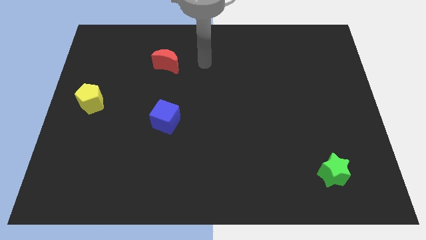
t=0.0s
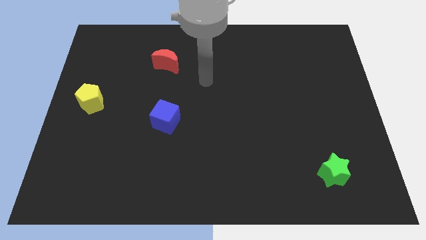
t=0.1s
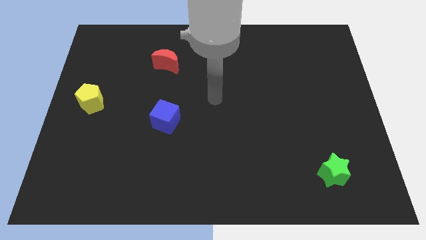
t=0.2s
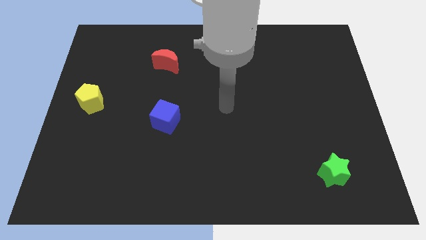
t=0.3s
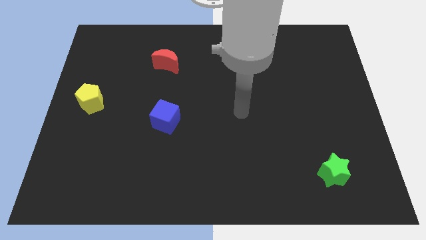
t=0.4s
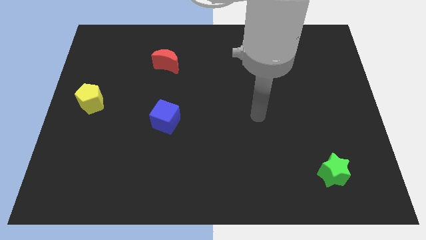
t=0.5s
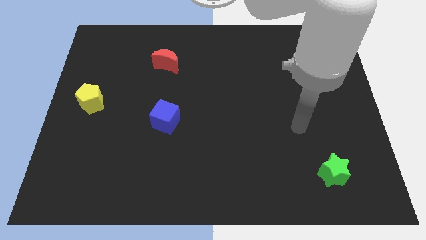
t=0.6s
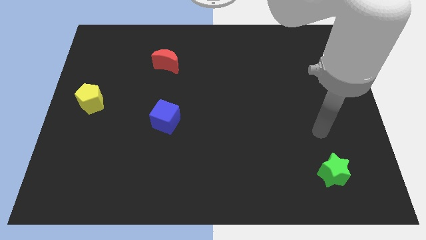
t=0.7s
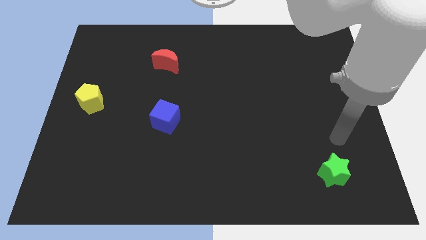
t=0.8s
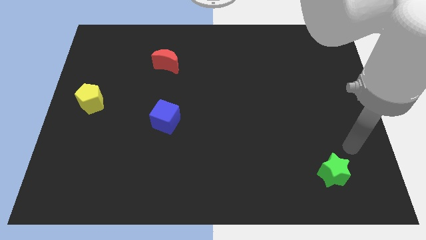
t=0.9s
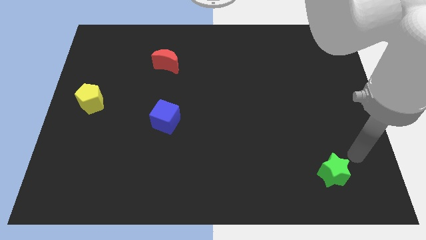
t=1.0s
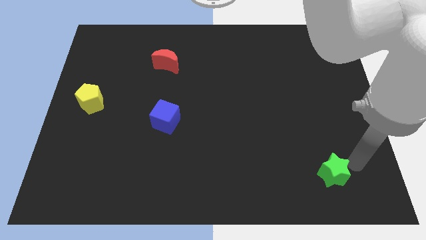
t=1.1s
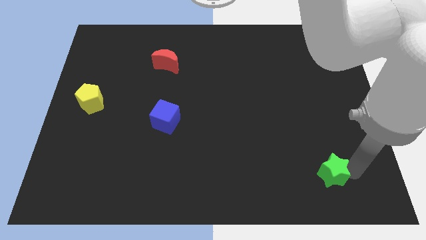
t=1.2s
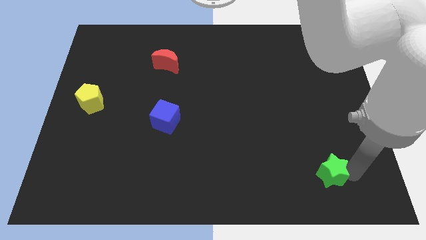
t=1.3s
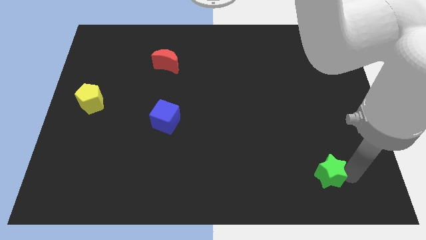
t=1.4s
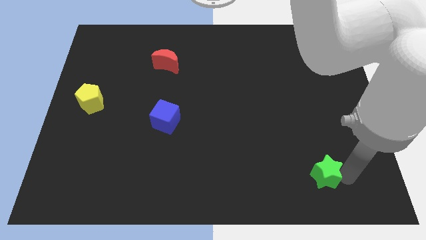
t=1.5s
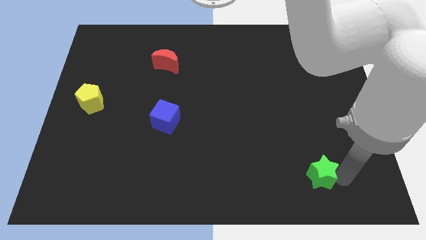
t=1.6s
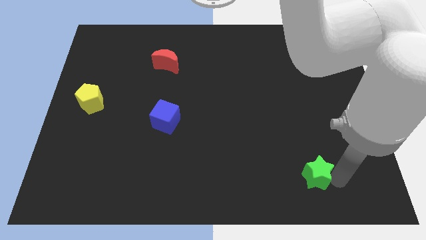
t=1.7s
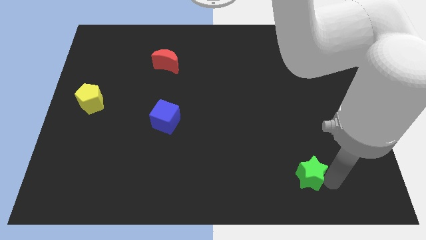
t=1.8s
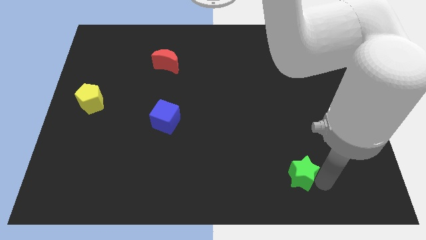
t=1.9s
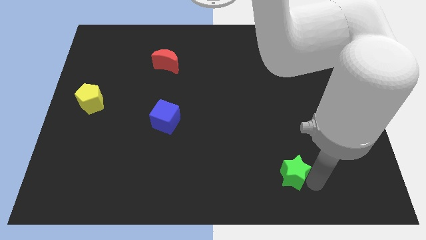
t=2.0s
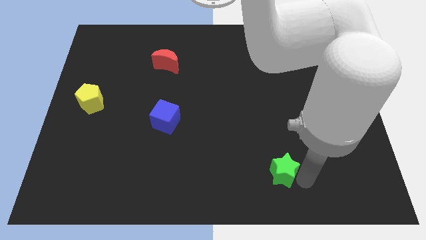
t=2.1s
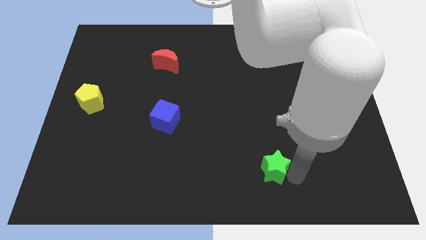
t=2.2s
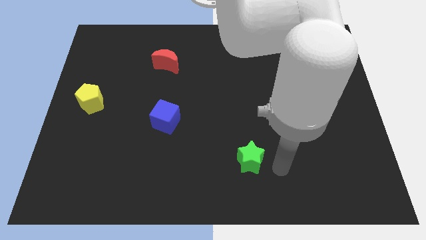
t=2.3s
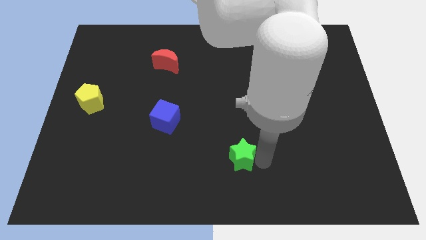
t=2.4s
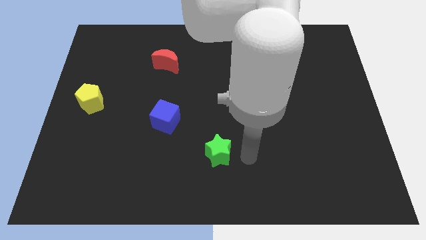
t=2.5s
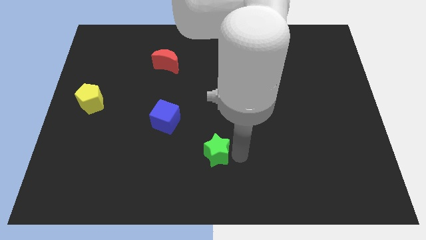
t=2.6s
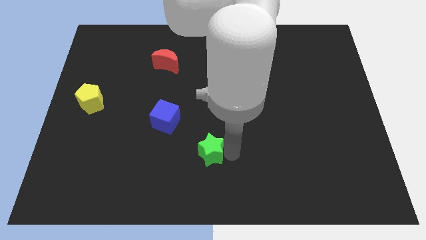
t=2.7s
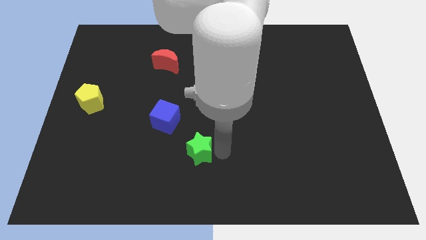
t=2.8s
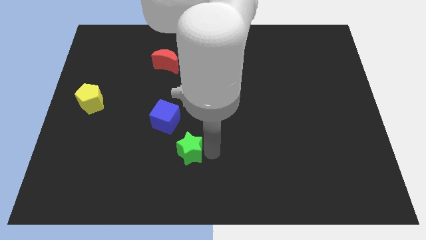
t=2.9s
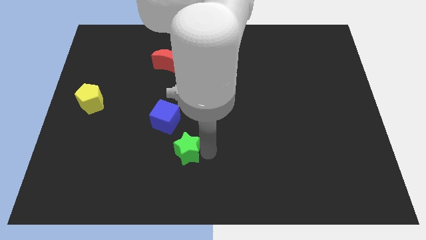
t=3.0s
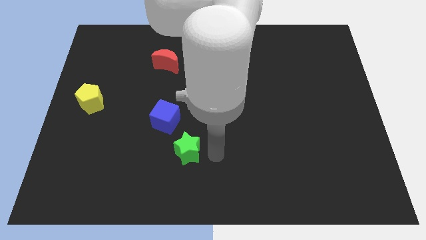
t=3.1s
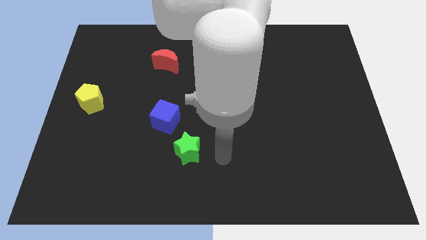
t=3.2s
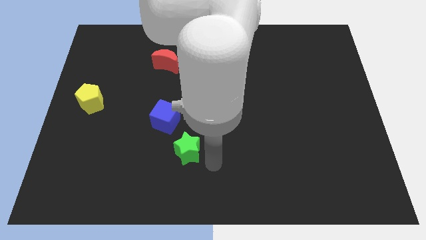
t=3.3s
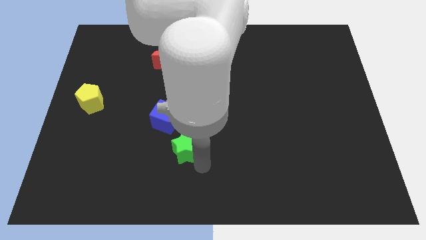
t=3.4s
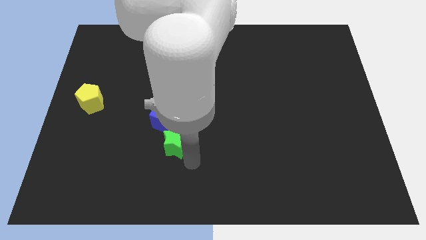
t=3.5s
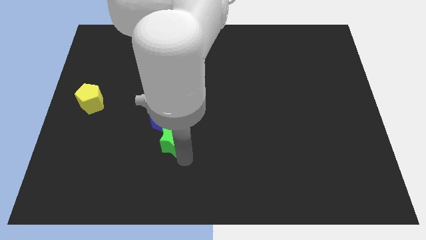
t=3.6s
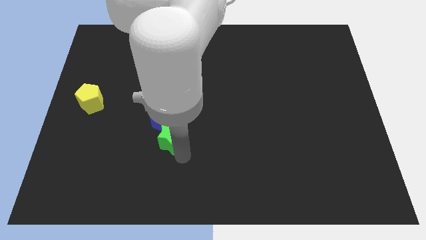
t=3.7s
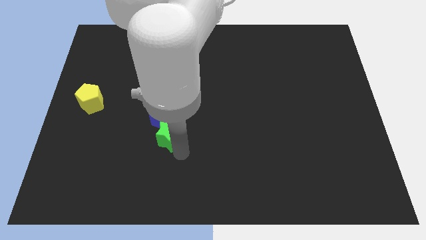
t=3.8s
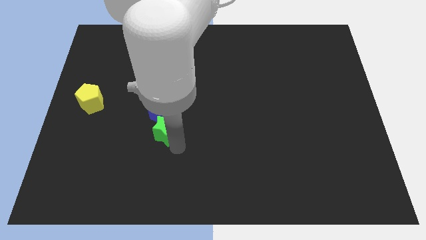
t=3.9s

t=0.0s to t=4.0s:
put the star to the blue cube

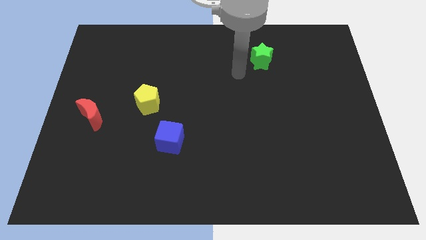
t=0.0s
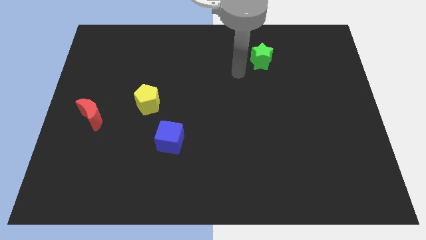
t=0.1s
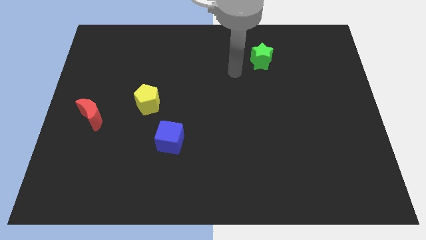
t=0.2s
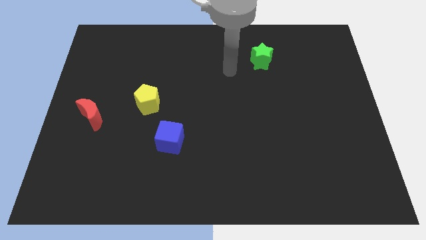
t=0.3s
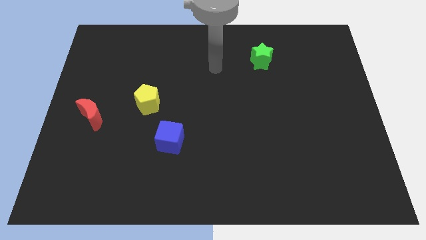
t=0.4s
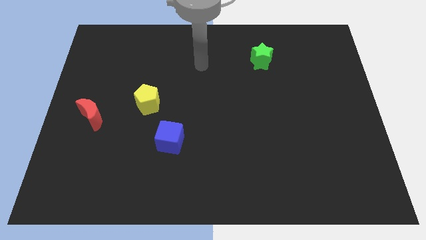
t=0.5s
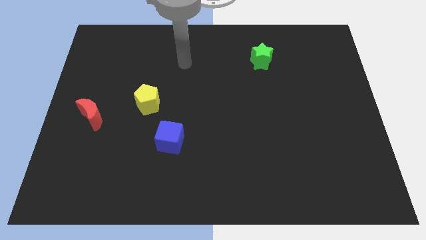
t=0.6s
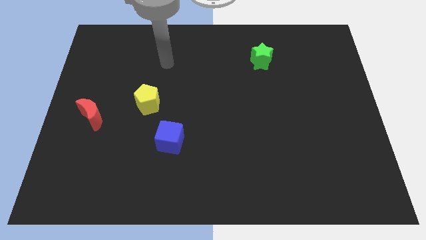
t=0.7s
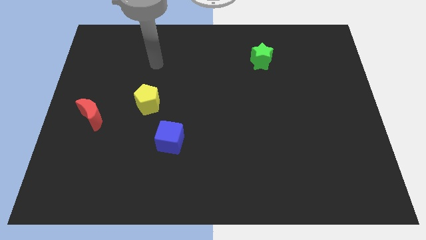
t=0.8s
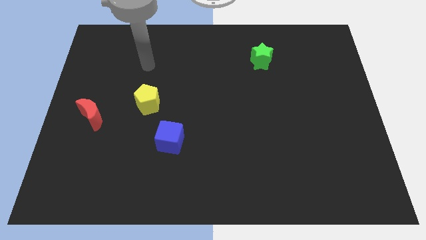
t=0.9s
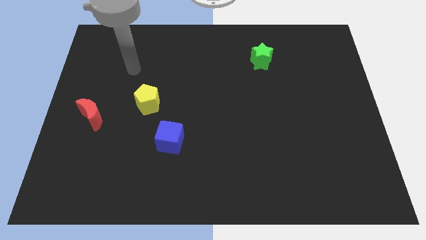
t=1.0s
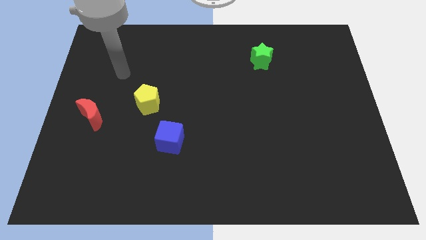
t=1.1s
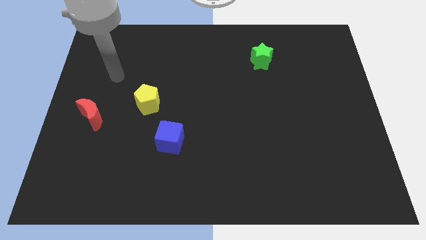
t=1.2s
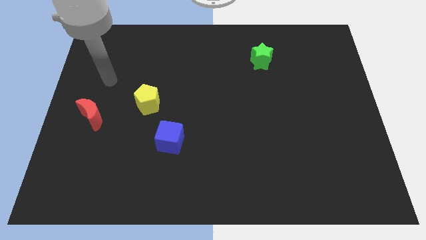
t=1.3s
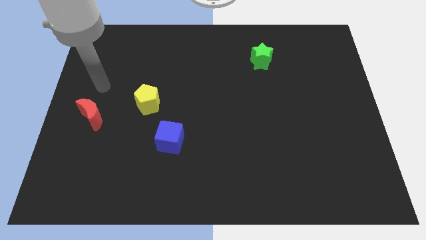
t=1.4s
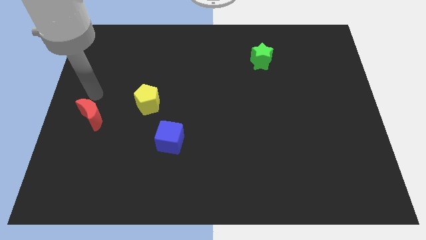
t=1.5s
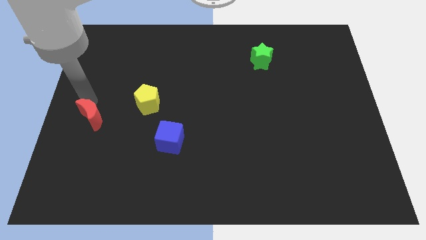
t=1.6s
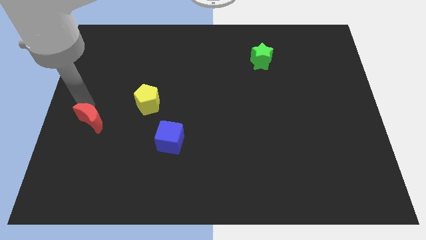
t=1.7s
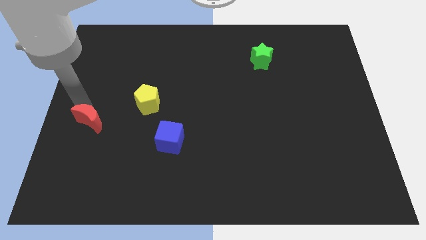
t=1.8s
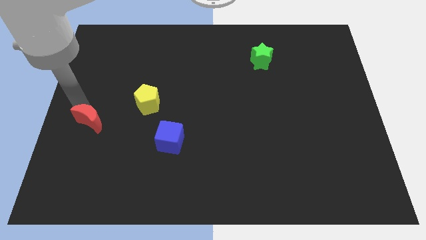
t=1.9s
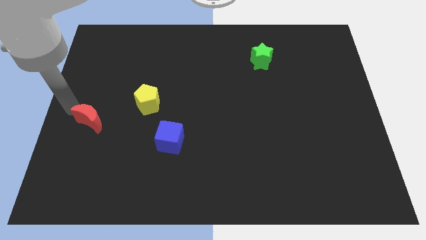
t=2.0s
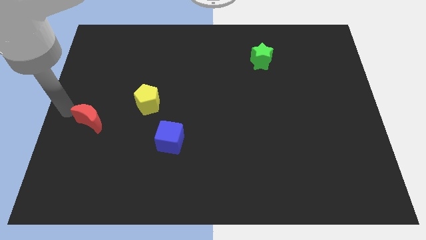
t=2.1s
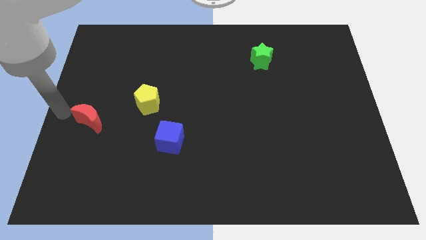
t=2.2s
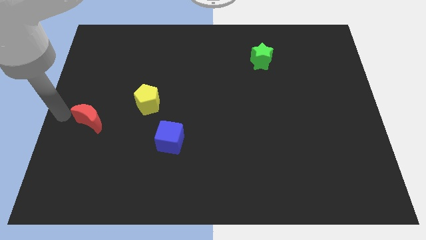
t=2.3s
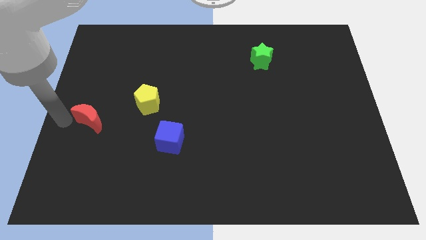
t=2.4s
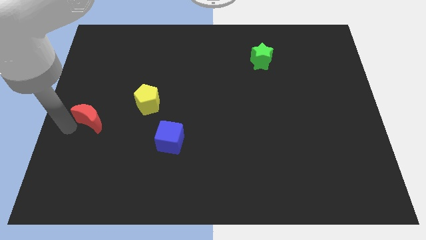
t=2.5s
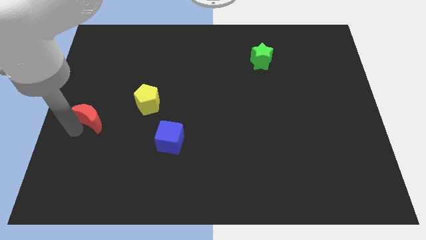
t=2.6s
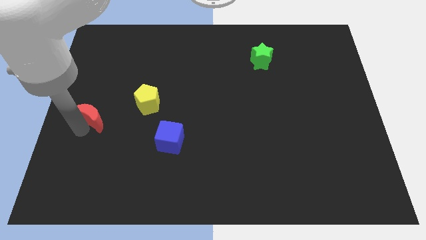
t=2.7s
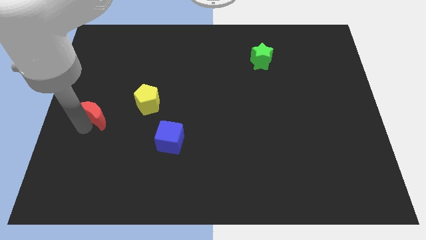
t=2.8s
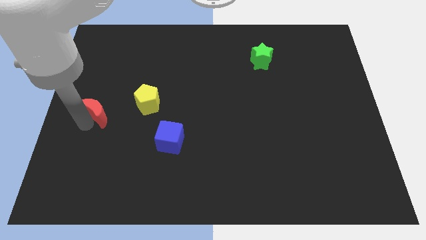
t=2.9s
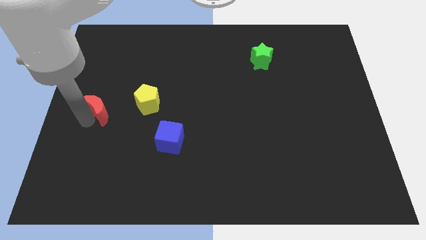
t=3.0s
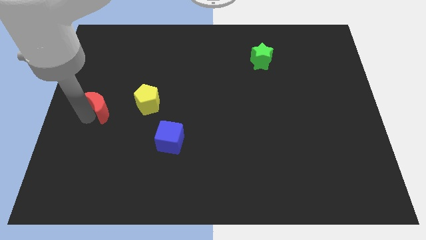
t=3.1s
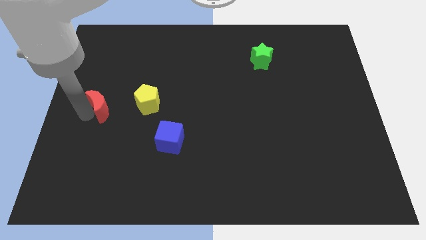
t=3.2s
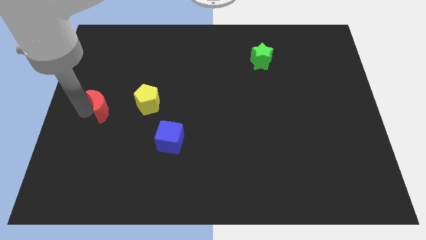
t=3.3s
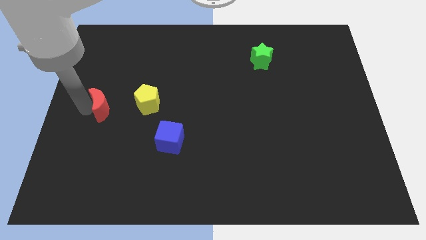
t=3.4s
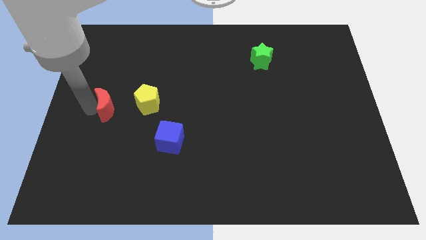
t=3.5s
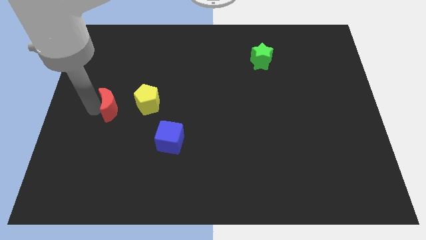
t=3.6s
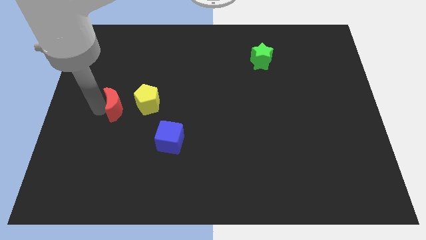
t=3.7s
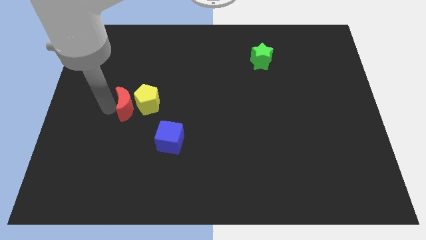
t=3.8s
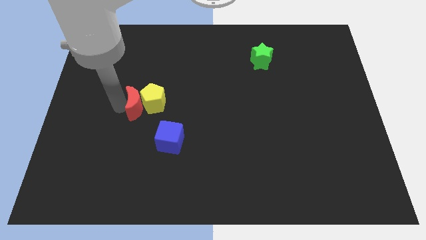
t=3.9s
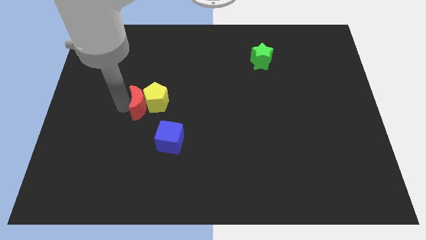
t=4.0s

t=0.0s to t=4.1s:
slide the red block to the pentagon
